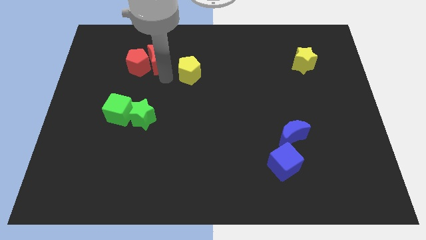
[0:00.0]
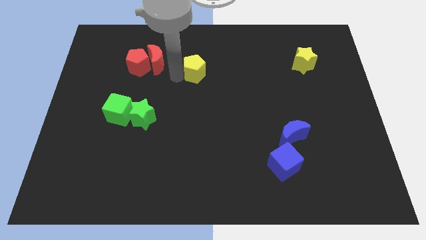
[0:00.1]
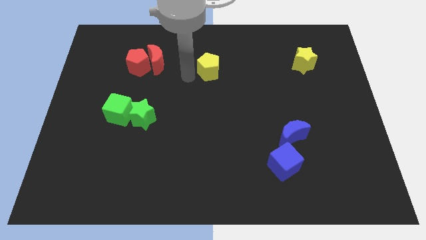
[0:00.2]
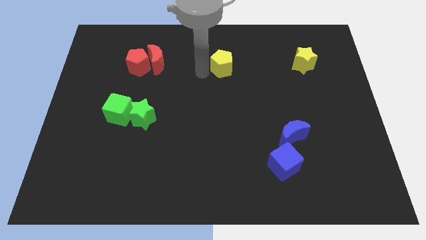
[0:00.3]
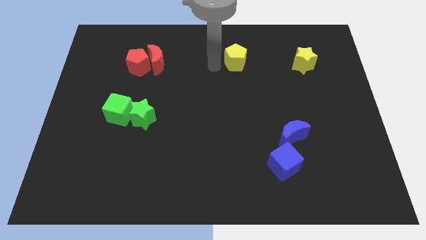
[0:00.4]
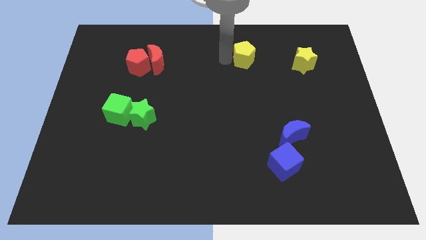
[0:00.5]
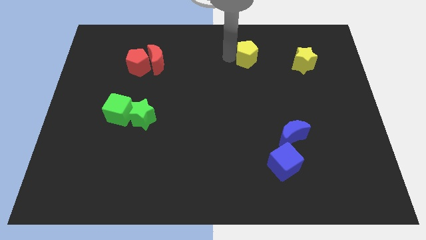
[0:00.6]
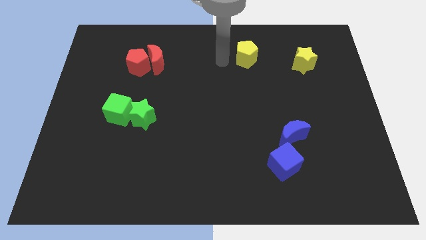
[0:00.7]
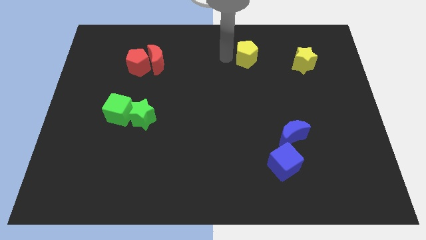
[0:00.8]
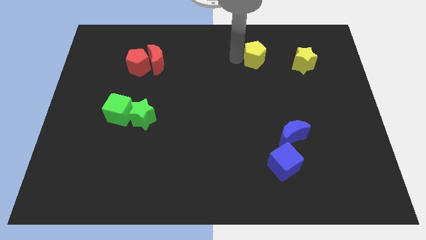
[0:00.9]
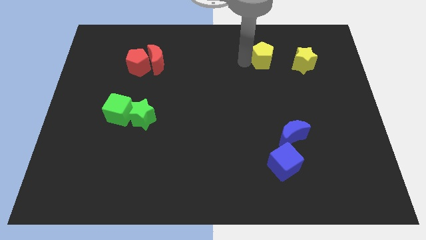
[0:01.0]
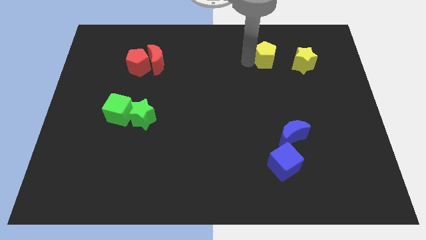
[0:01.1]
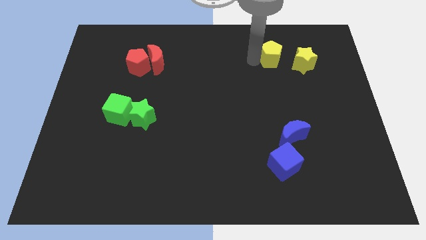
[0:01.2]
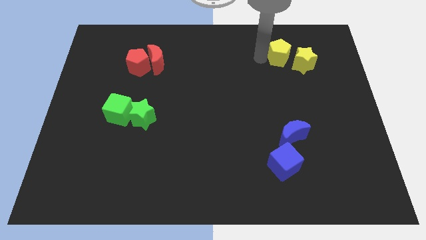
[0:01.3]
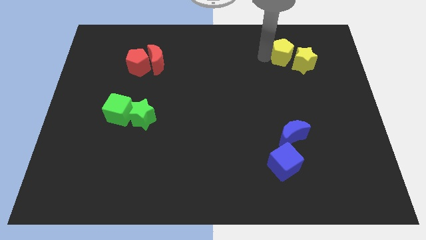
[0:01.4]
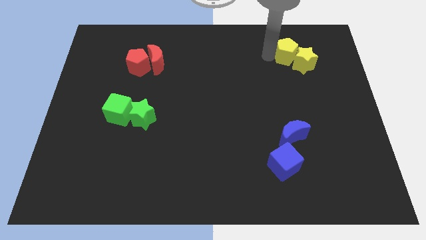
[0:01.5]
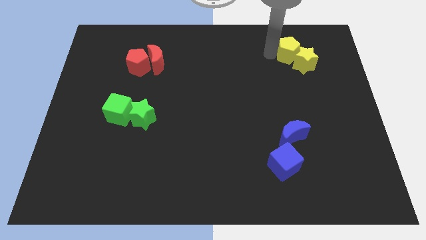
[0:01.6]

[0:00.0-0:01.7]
push the yellow pentagon into the yellow star

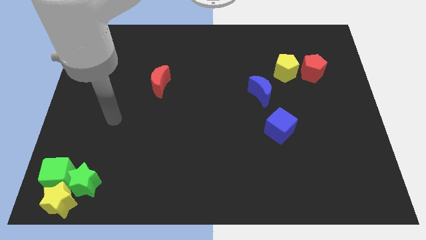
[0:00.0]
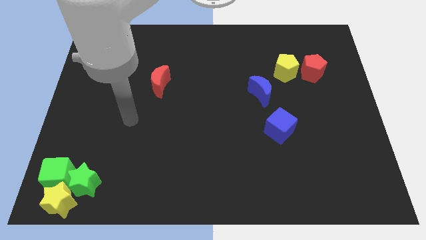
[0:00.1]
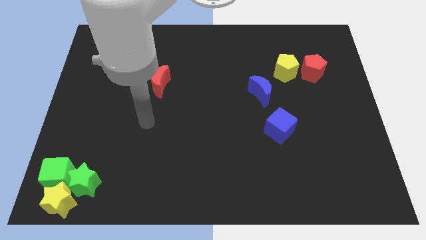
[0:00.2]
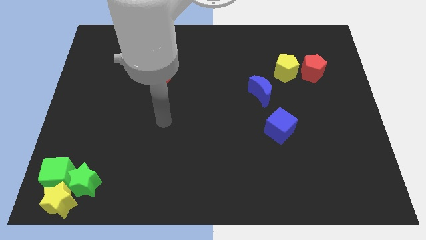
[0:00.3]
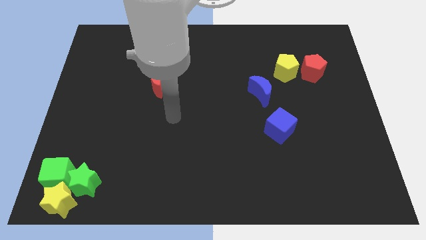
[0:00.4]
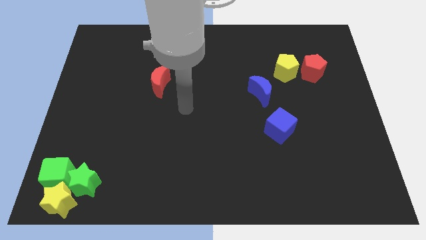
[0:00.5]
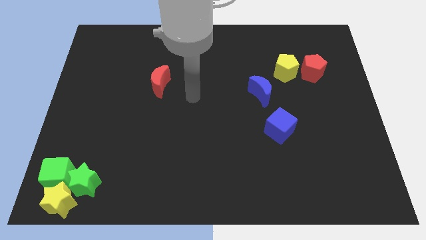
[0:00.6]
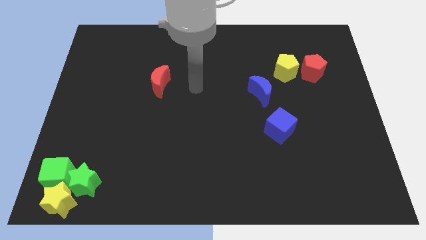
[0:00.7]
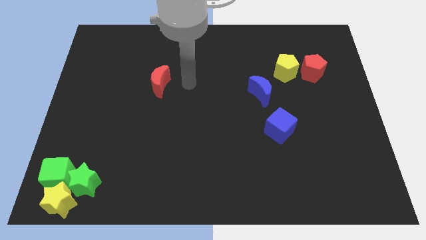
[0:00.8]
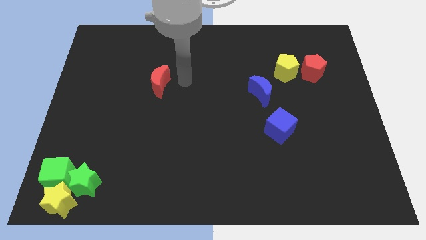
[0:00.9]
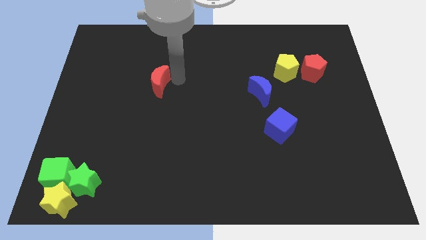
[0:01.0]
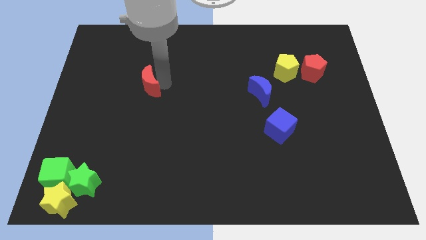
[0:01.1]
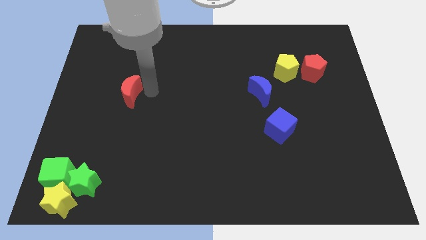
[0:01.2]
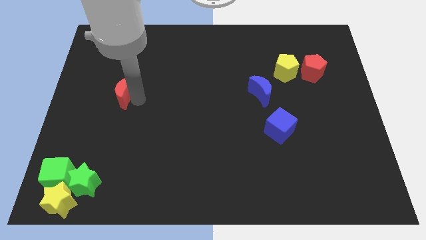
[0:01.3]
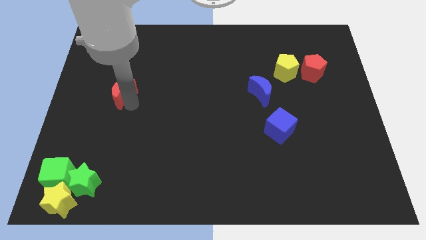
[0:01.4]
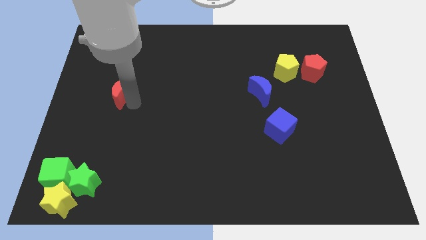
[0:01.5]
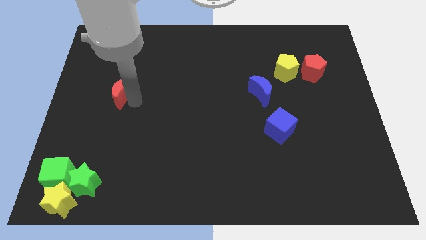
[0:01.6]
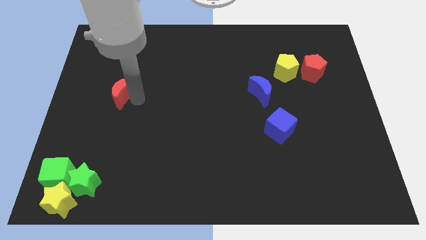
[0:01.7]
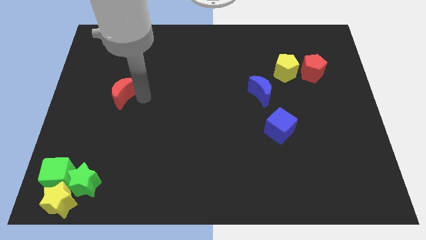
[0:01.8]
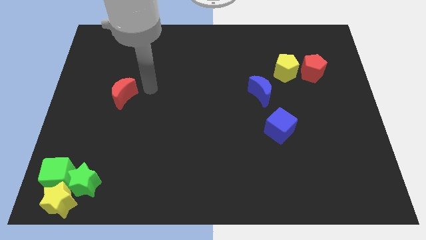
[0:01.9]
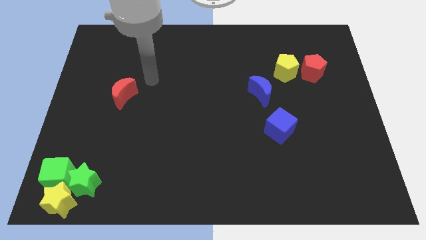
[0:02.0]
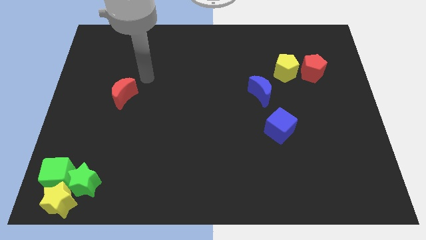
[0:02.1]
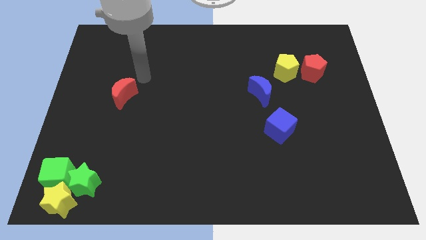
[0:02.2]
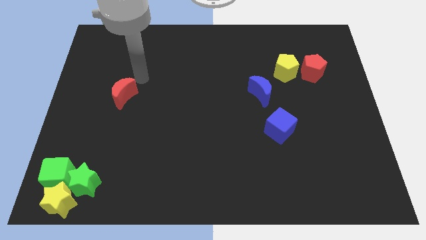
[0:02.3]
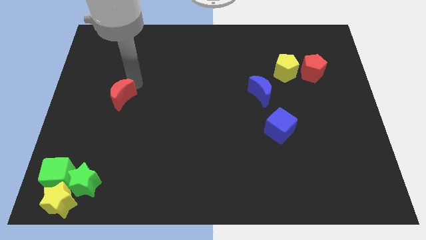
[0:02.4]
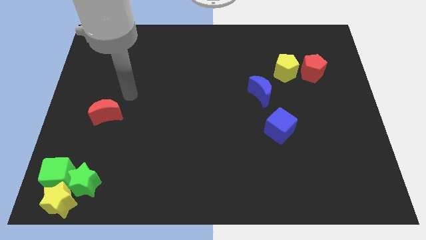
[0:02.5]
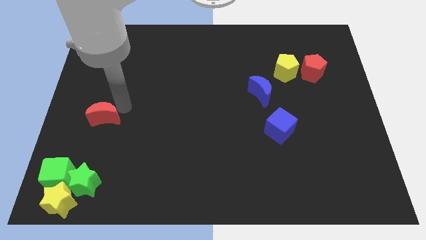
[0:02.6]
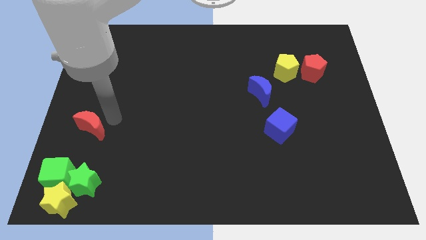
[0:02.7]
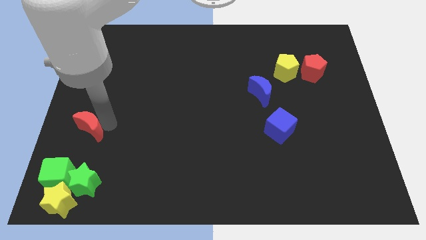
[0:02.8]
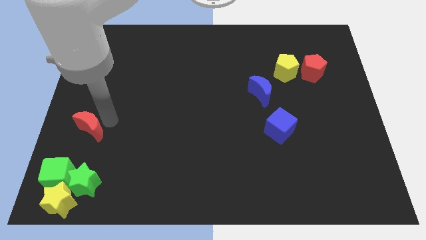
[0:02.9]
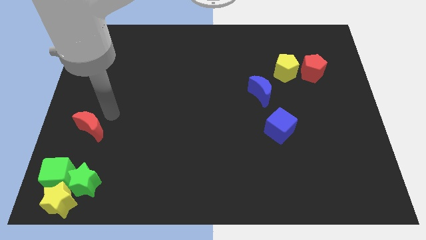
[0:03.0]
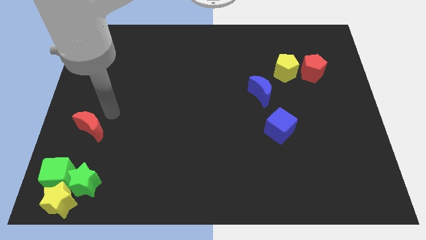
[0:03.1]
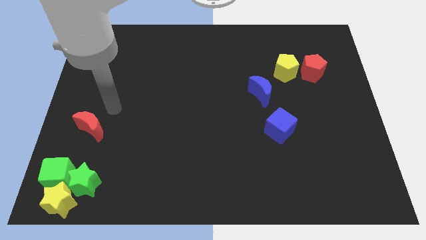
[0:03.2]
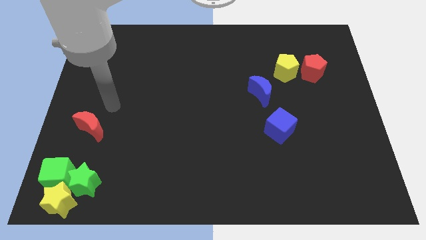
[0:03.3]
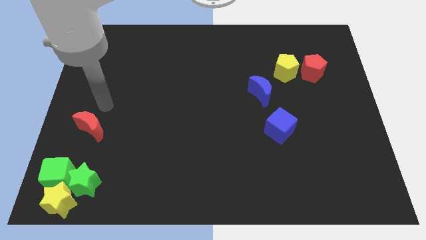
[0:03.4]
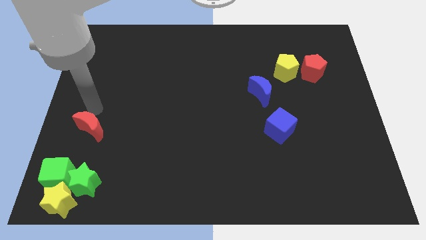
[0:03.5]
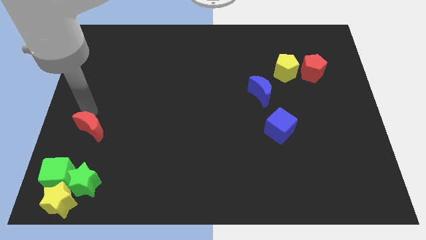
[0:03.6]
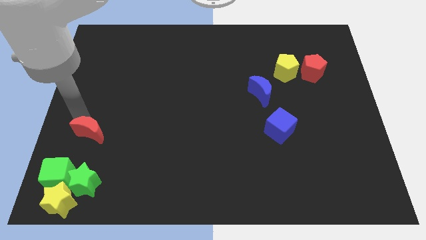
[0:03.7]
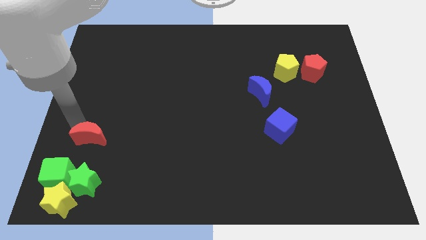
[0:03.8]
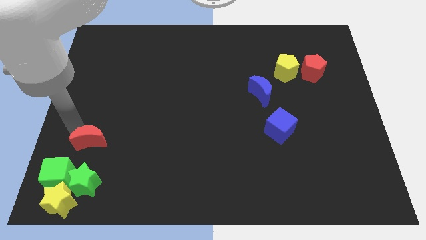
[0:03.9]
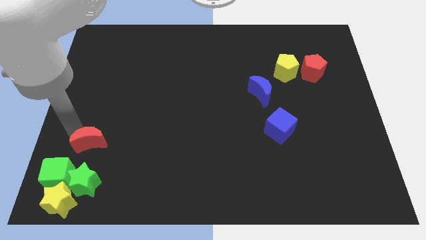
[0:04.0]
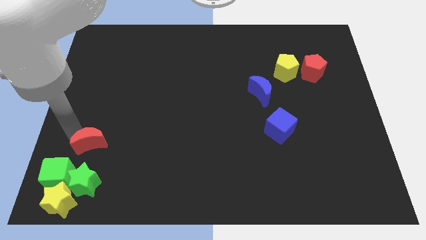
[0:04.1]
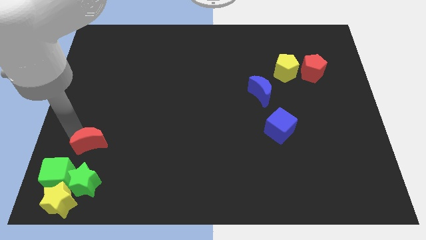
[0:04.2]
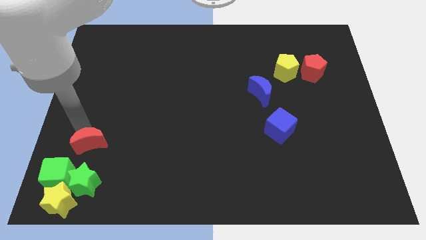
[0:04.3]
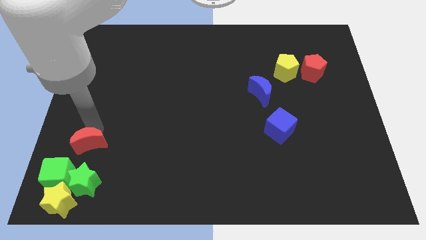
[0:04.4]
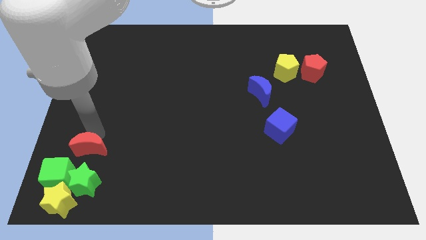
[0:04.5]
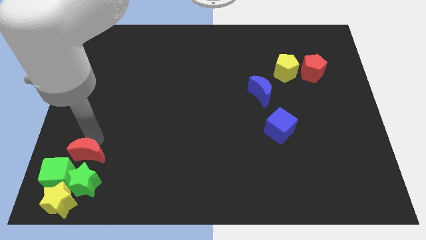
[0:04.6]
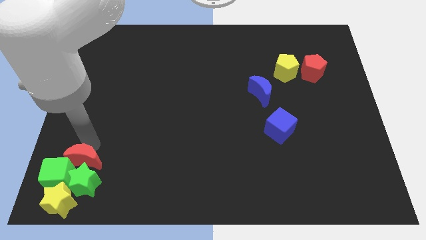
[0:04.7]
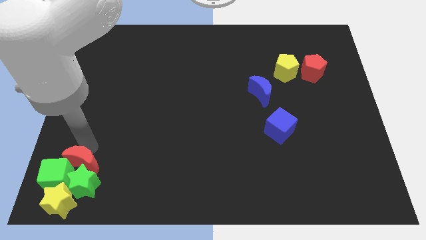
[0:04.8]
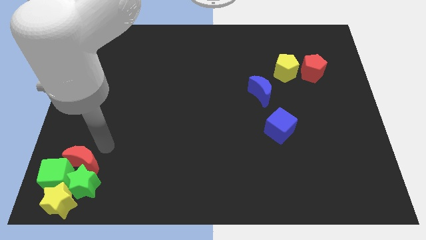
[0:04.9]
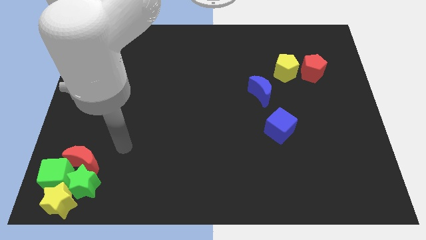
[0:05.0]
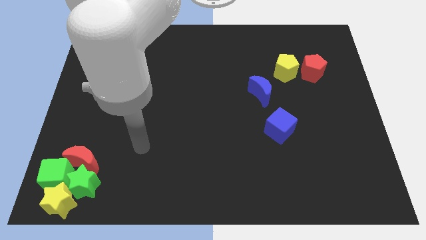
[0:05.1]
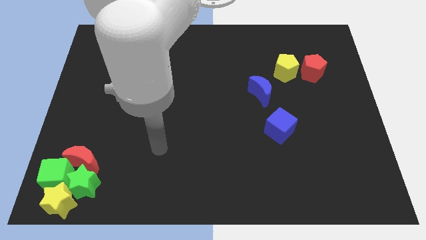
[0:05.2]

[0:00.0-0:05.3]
push the red moon into the green blocks

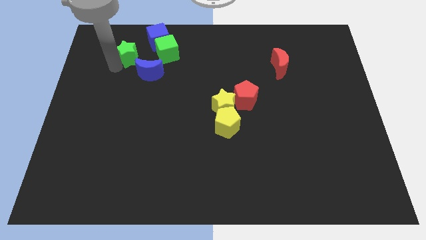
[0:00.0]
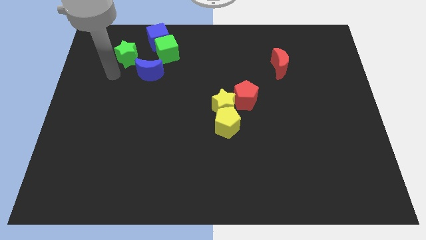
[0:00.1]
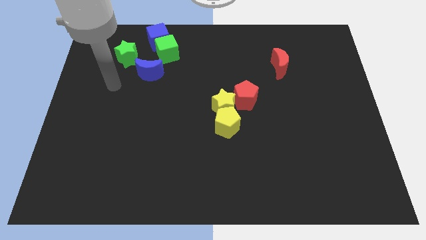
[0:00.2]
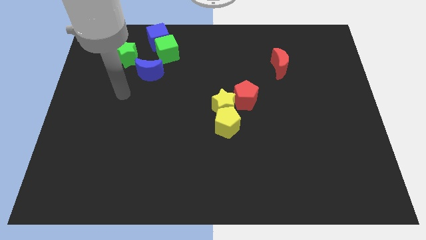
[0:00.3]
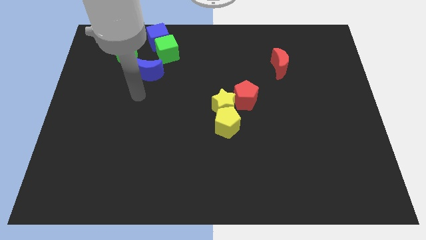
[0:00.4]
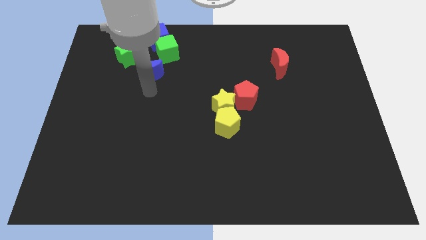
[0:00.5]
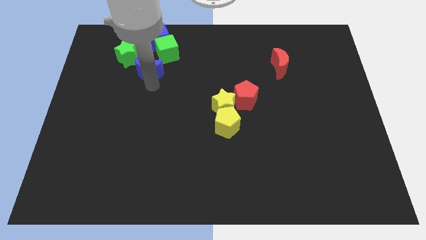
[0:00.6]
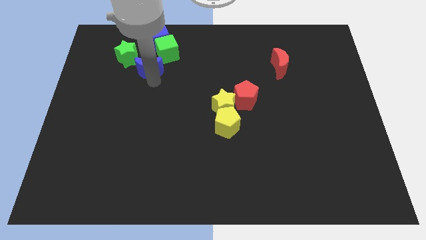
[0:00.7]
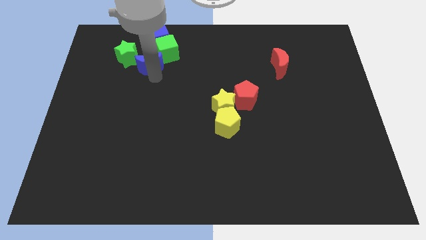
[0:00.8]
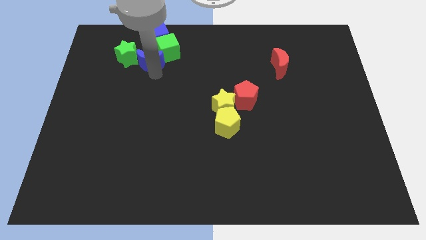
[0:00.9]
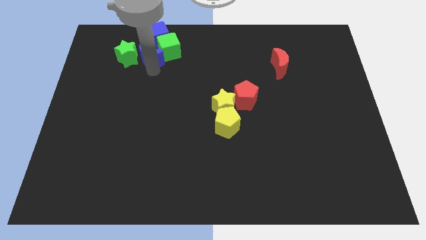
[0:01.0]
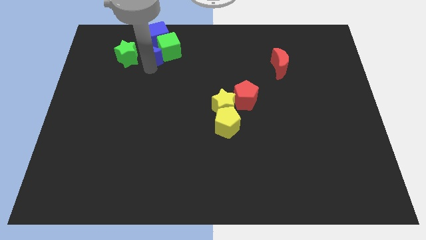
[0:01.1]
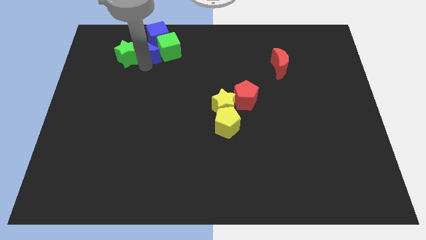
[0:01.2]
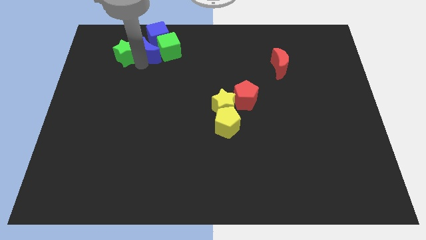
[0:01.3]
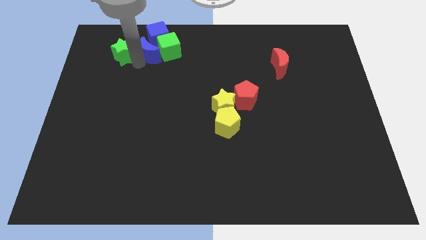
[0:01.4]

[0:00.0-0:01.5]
push blue moon between green star and green cube

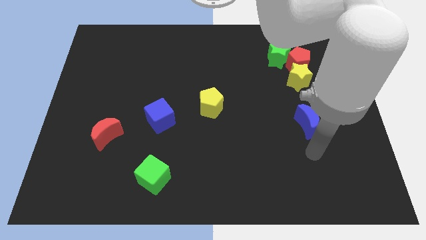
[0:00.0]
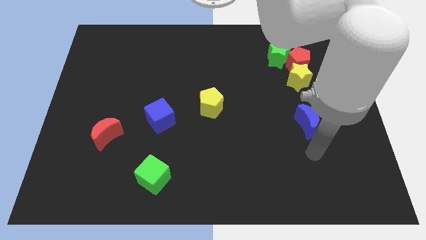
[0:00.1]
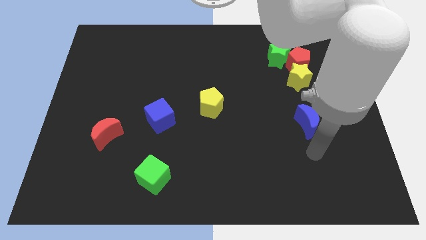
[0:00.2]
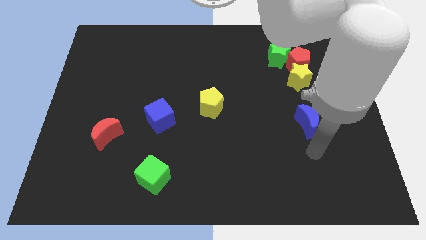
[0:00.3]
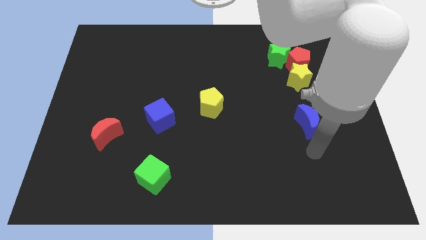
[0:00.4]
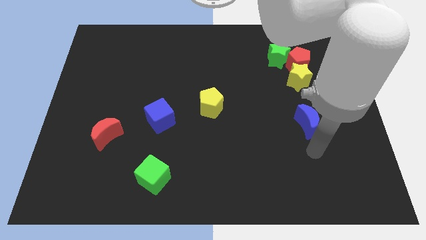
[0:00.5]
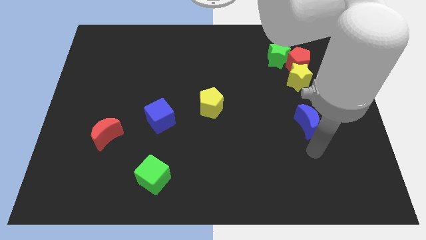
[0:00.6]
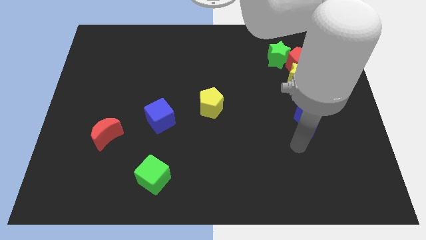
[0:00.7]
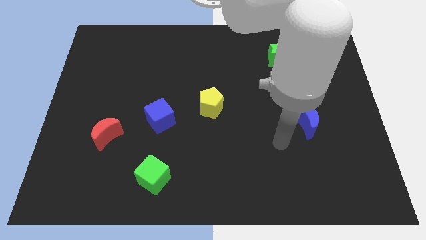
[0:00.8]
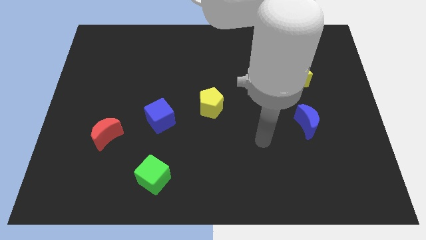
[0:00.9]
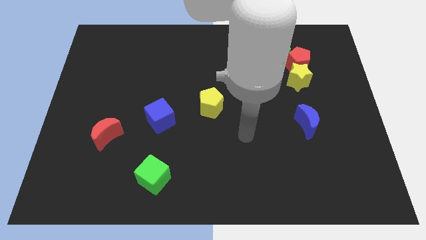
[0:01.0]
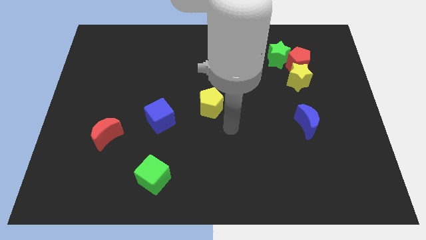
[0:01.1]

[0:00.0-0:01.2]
move your arm towards the yellow pentagon
